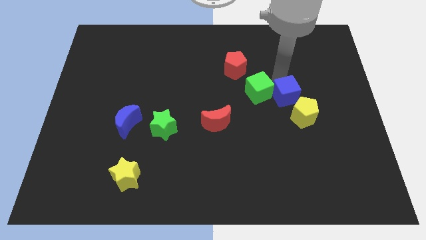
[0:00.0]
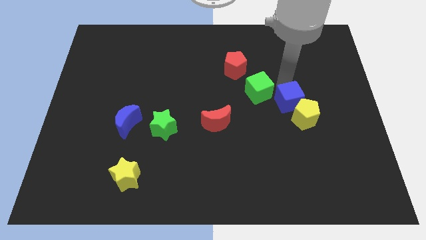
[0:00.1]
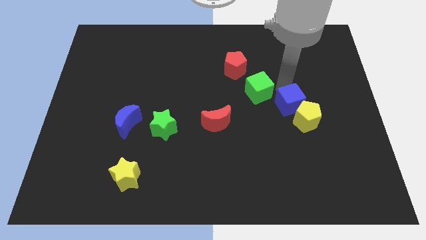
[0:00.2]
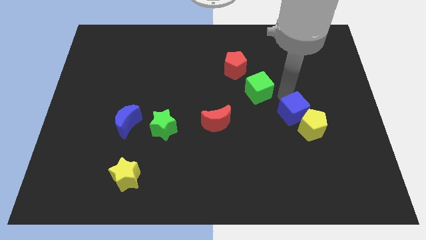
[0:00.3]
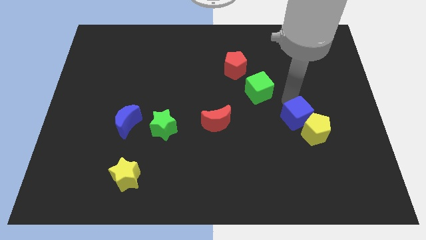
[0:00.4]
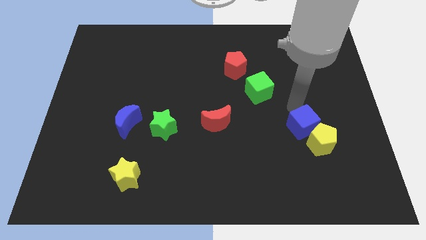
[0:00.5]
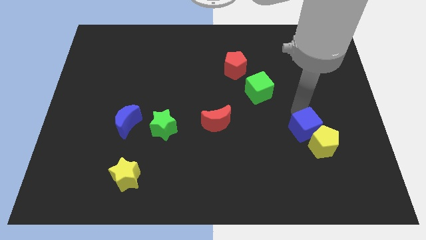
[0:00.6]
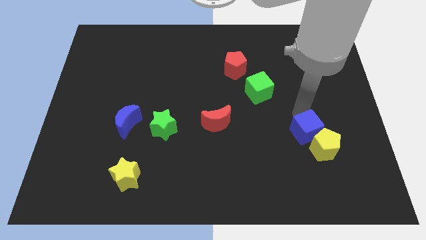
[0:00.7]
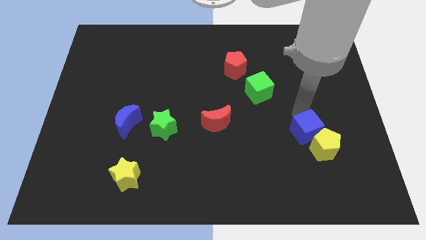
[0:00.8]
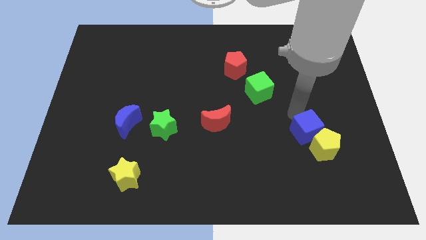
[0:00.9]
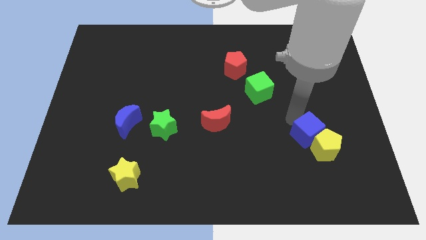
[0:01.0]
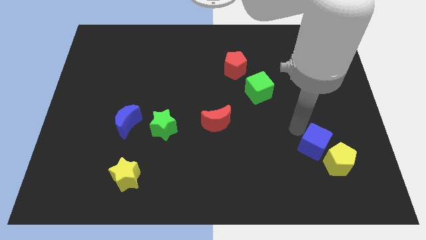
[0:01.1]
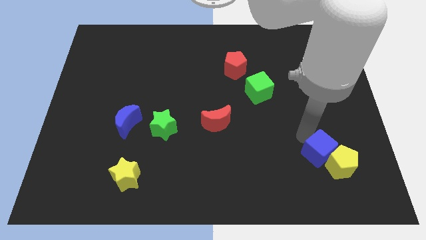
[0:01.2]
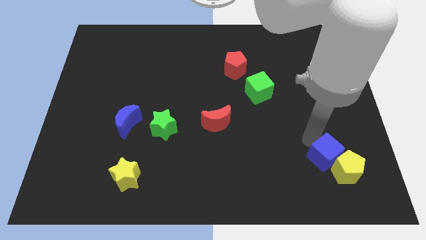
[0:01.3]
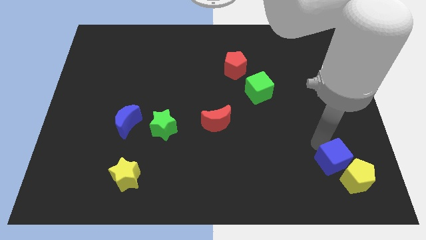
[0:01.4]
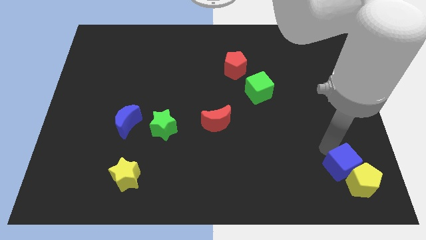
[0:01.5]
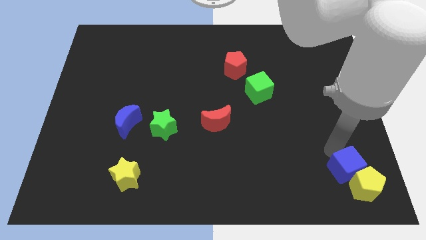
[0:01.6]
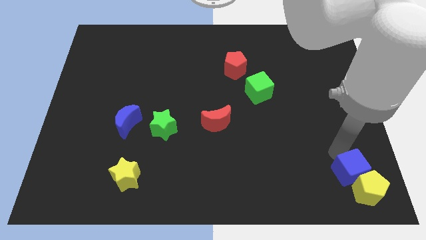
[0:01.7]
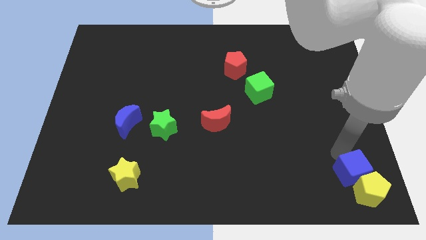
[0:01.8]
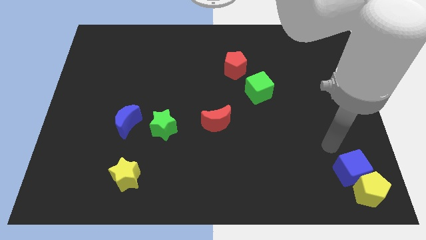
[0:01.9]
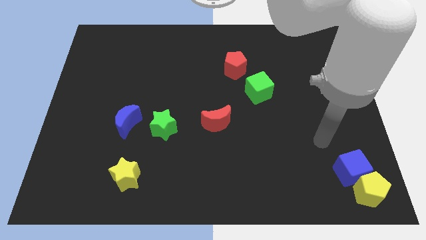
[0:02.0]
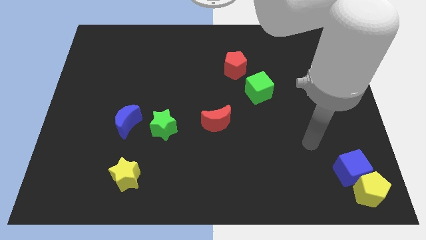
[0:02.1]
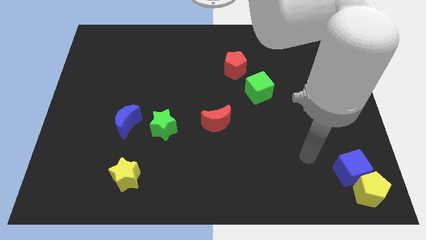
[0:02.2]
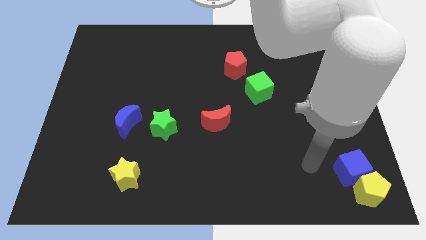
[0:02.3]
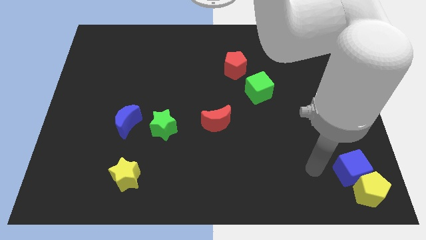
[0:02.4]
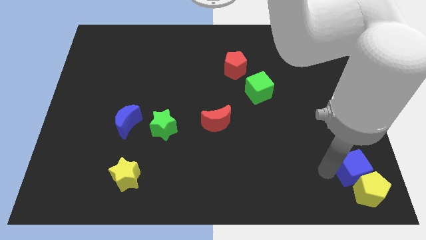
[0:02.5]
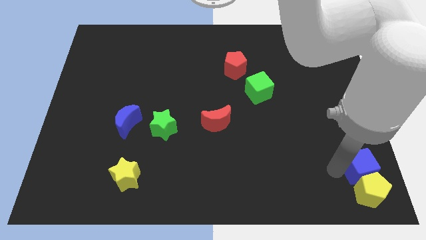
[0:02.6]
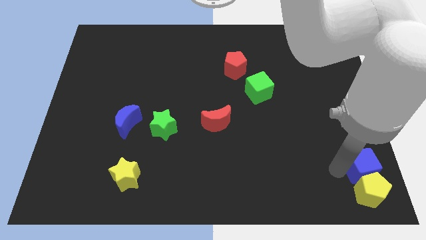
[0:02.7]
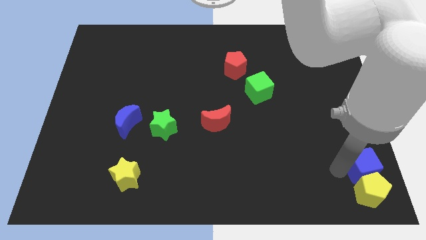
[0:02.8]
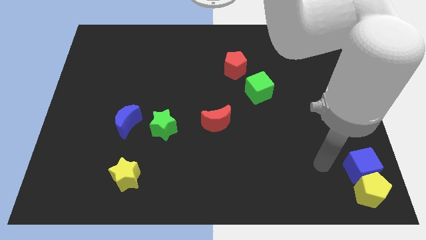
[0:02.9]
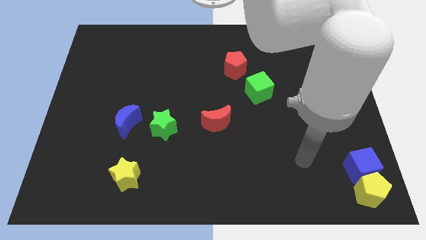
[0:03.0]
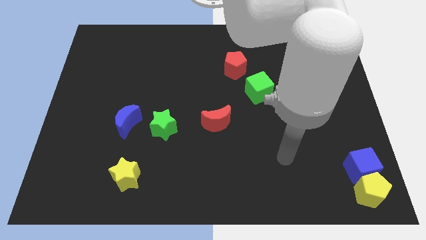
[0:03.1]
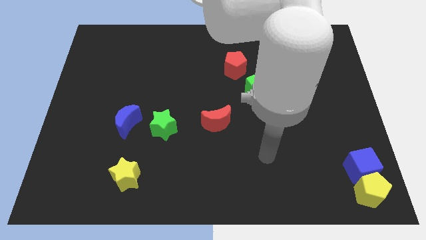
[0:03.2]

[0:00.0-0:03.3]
move the blue cube and yellow pentagon towards the right bottom corner

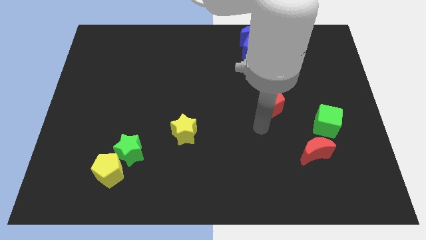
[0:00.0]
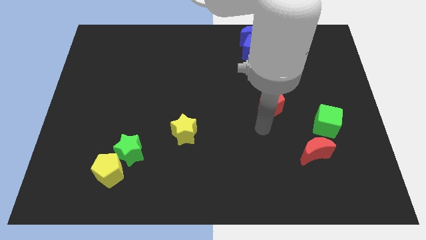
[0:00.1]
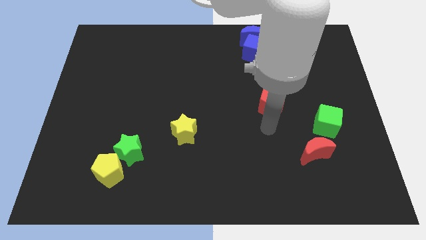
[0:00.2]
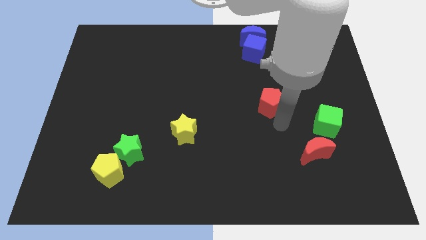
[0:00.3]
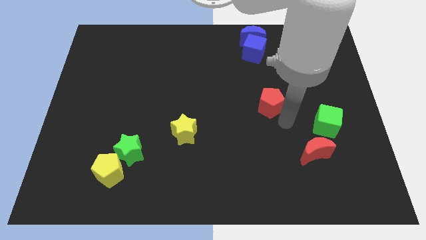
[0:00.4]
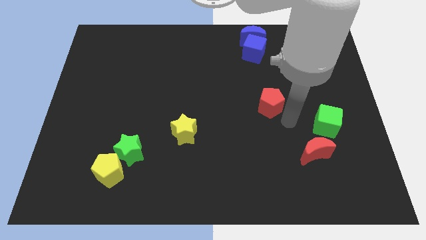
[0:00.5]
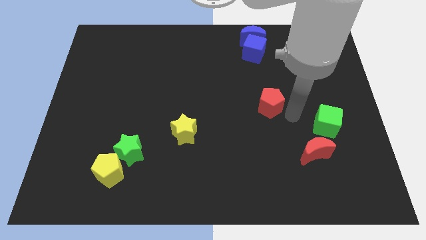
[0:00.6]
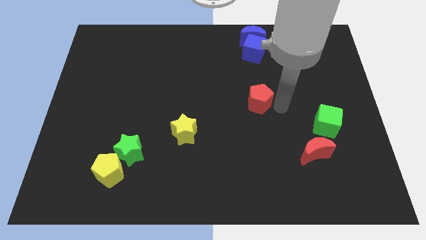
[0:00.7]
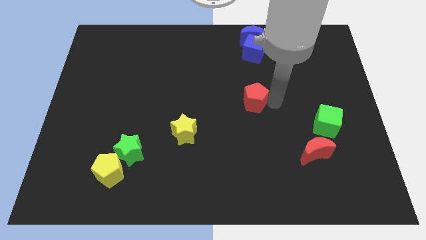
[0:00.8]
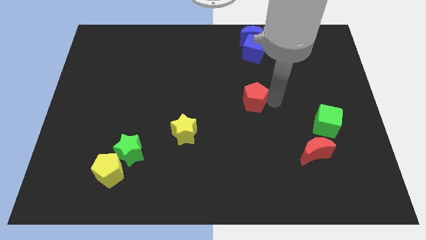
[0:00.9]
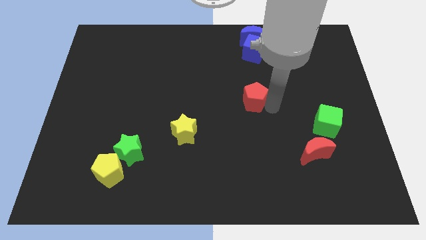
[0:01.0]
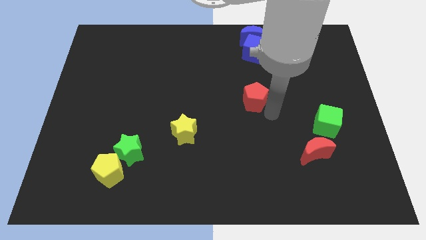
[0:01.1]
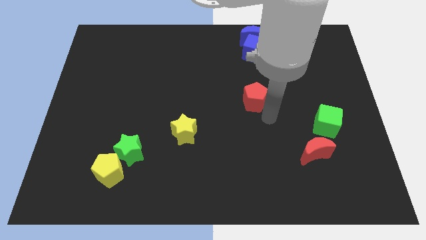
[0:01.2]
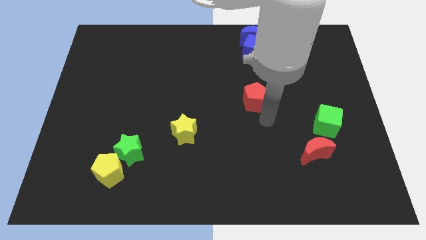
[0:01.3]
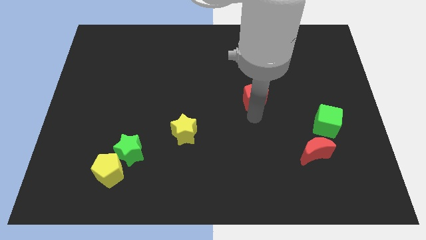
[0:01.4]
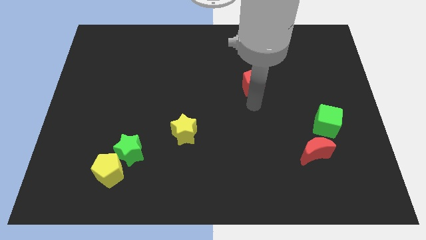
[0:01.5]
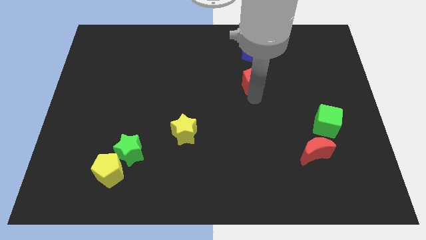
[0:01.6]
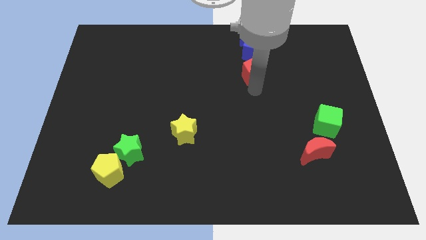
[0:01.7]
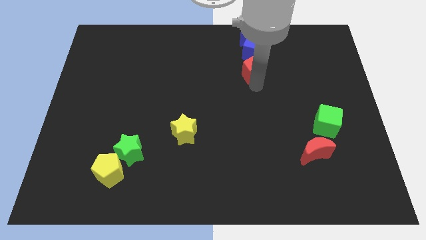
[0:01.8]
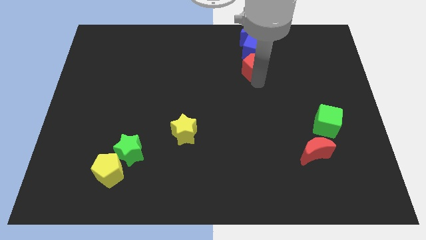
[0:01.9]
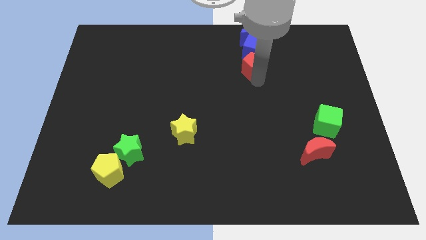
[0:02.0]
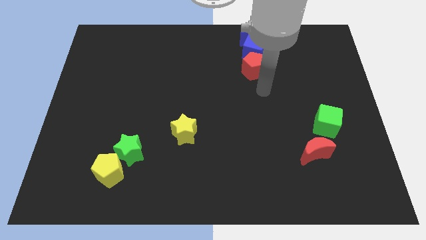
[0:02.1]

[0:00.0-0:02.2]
move the red pentagon upward to the below the blue cube

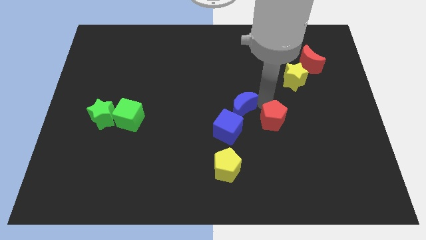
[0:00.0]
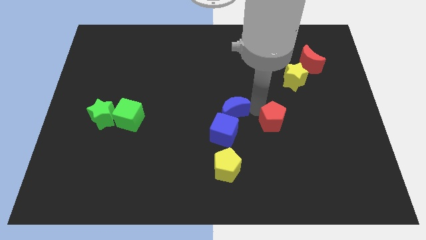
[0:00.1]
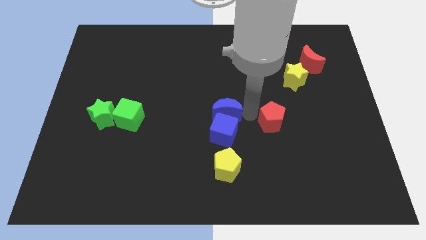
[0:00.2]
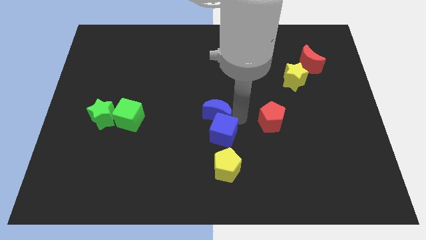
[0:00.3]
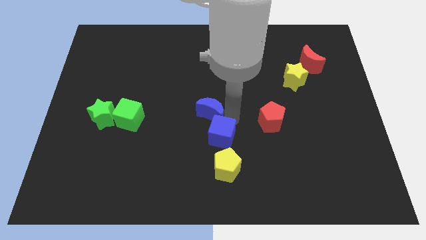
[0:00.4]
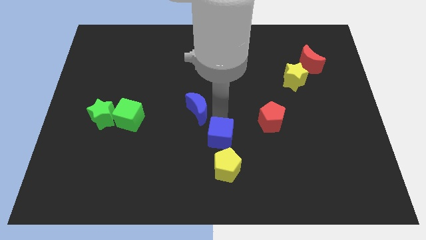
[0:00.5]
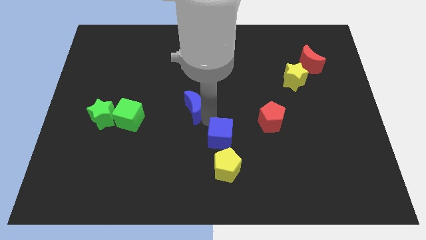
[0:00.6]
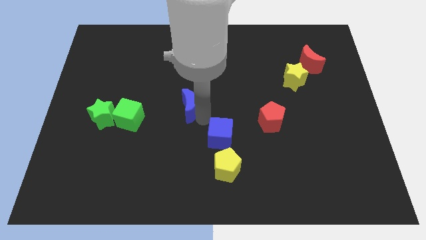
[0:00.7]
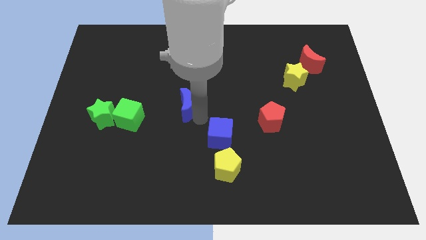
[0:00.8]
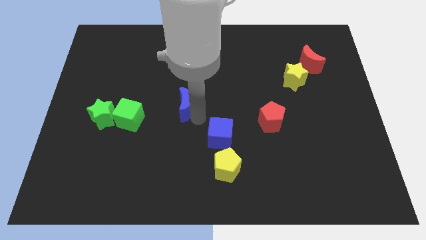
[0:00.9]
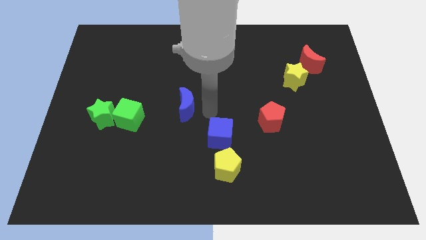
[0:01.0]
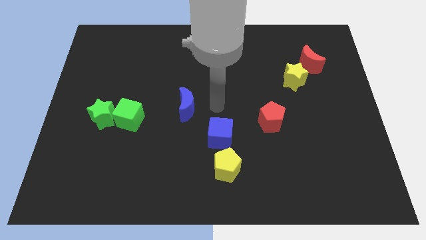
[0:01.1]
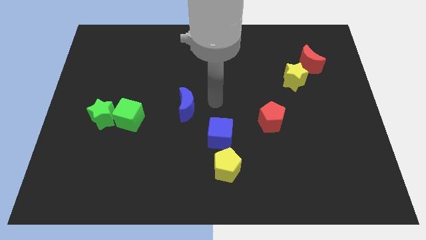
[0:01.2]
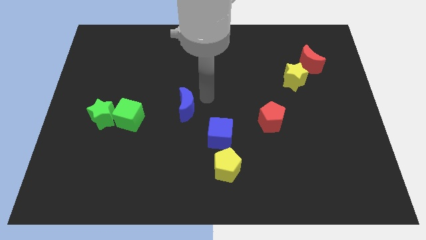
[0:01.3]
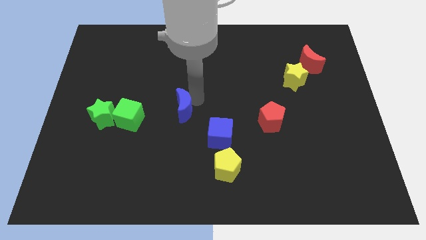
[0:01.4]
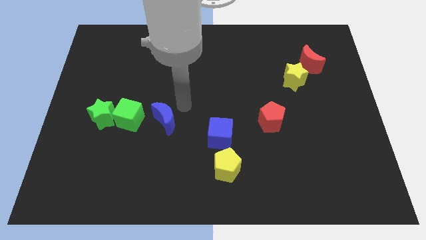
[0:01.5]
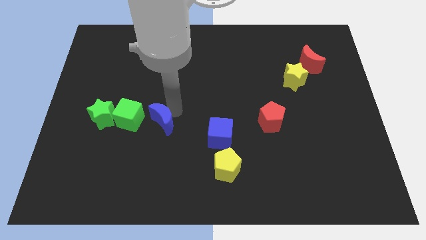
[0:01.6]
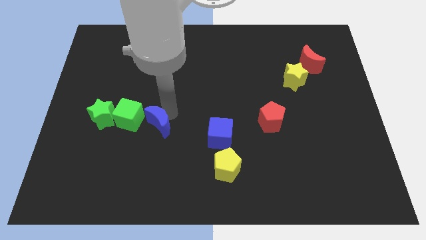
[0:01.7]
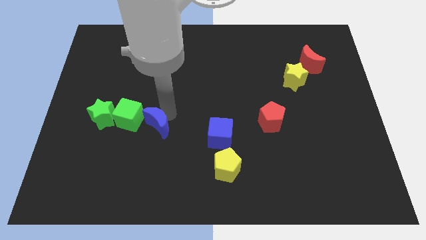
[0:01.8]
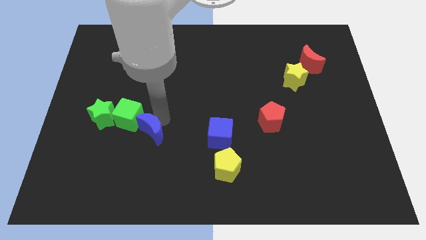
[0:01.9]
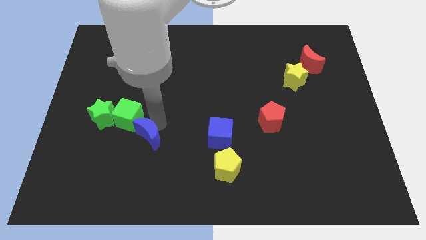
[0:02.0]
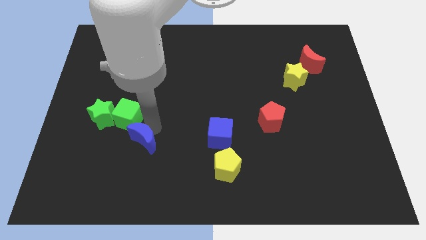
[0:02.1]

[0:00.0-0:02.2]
move the blue moon to the right of green cube

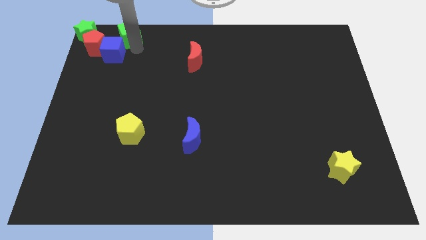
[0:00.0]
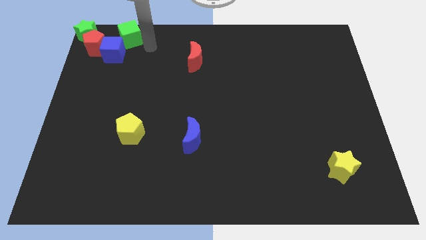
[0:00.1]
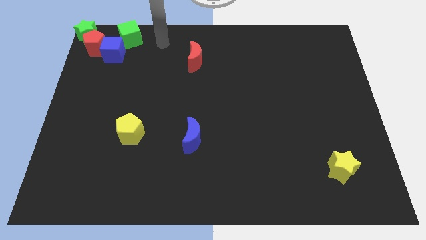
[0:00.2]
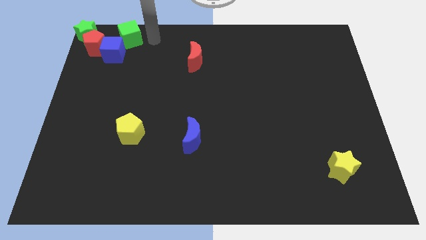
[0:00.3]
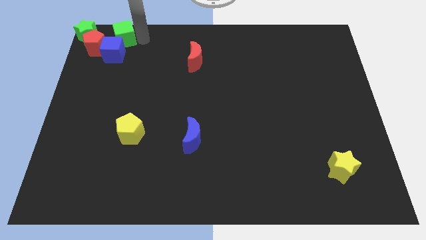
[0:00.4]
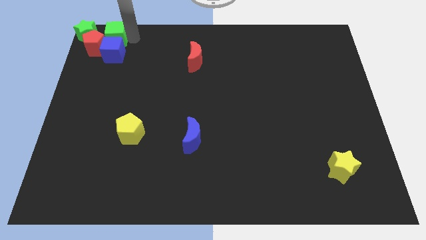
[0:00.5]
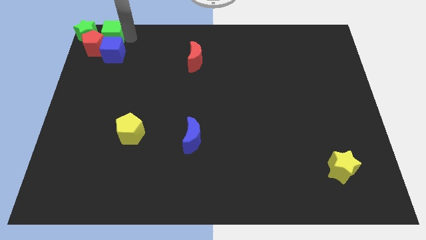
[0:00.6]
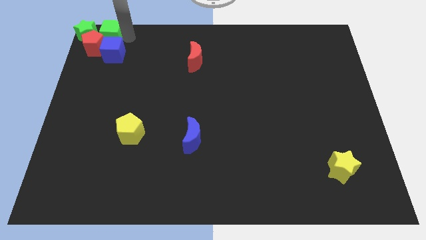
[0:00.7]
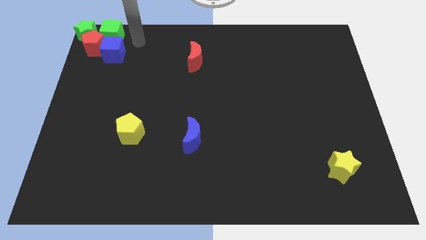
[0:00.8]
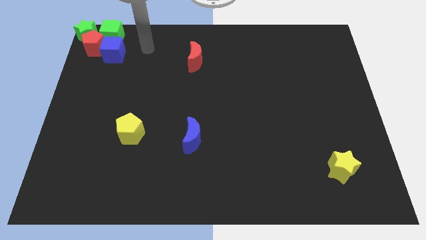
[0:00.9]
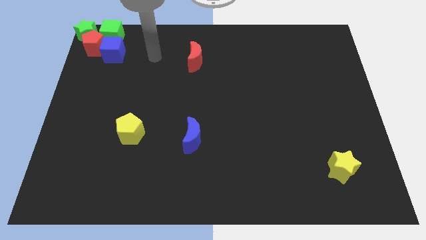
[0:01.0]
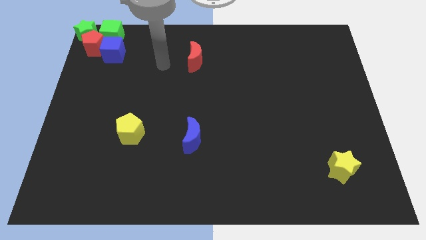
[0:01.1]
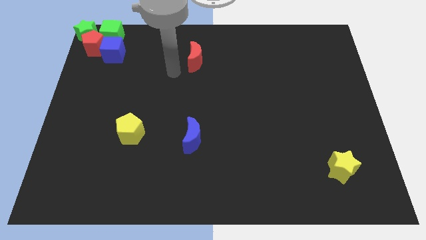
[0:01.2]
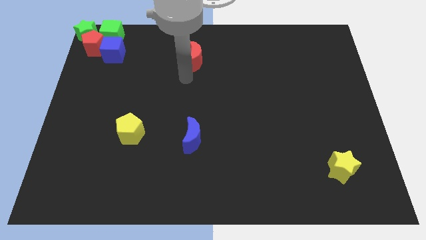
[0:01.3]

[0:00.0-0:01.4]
move green cube close to the green star
